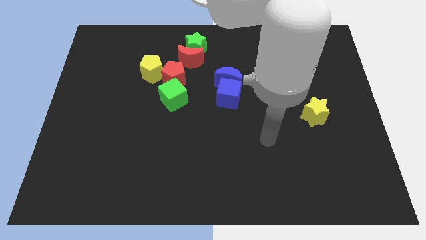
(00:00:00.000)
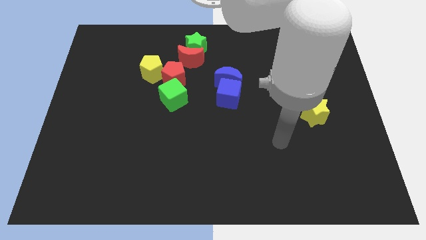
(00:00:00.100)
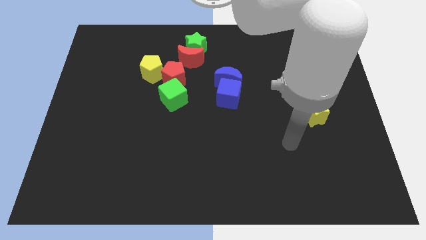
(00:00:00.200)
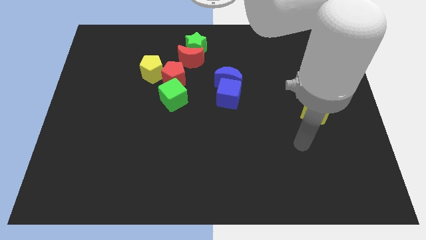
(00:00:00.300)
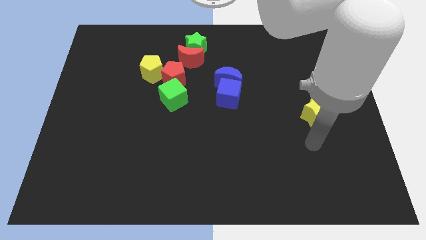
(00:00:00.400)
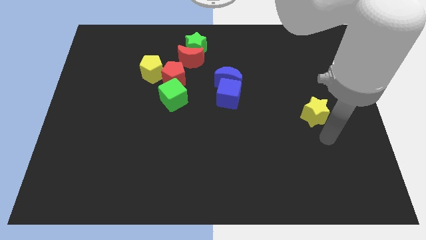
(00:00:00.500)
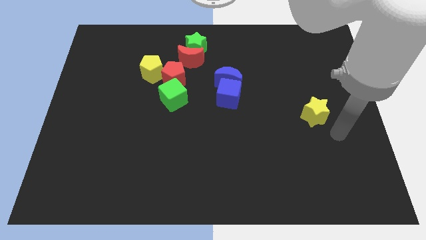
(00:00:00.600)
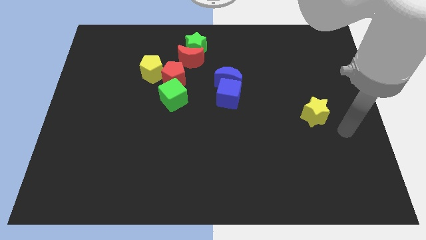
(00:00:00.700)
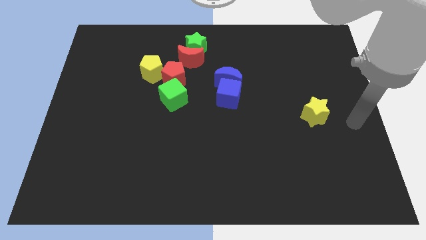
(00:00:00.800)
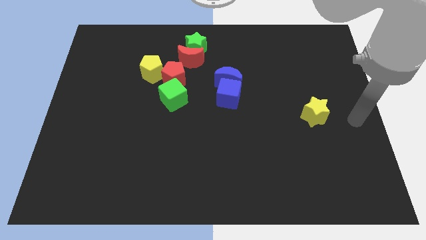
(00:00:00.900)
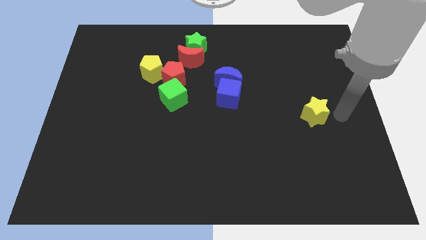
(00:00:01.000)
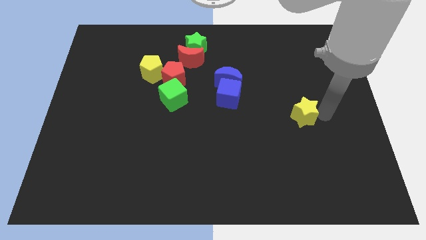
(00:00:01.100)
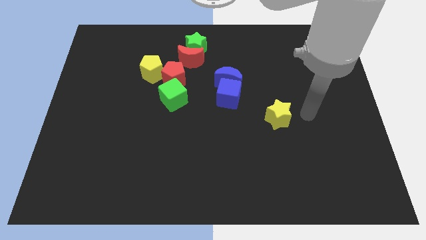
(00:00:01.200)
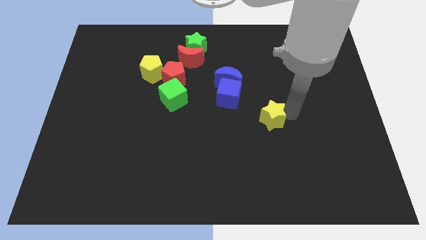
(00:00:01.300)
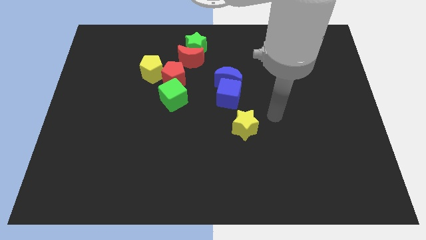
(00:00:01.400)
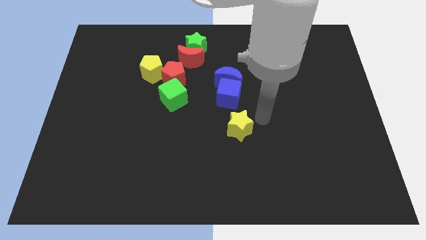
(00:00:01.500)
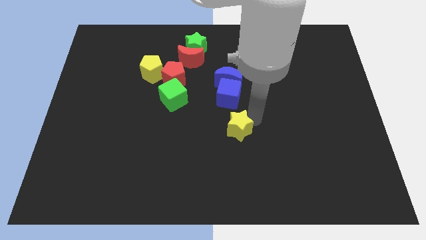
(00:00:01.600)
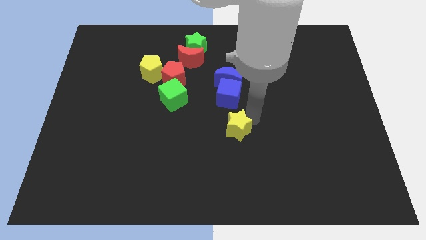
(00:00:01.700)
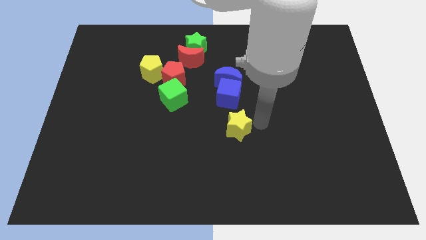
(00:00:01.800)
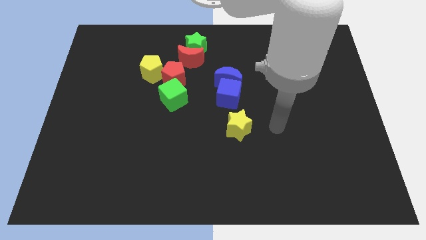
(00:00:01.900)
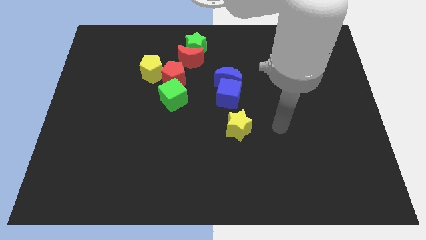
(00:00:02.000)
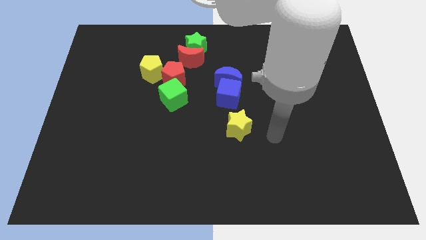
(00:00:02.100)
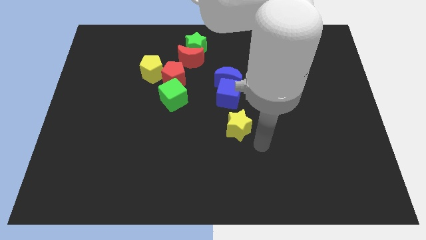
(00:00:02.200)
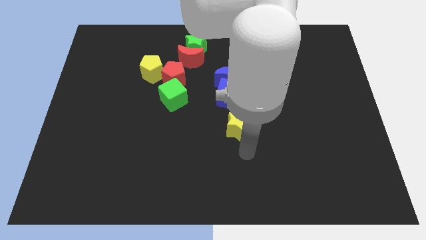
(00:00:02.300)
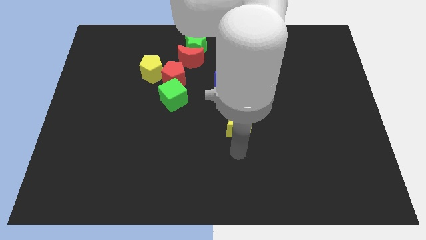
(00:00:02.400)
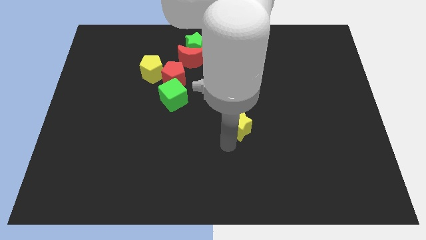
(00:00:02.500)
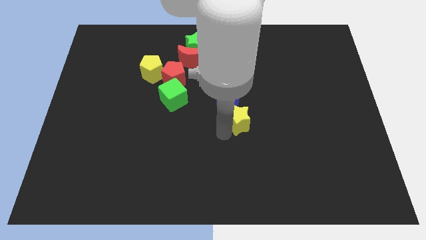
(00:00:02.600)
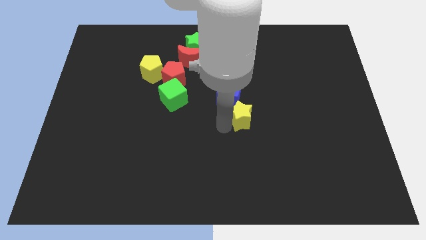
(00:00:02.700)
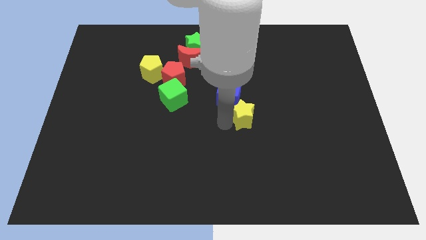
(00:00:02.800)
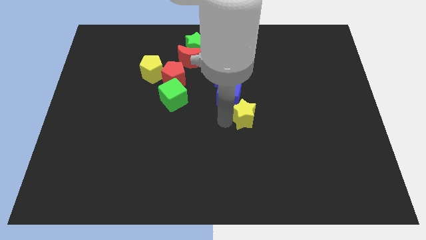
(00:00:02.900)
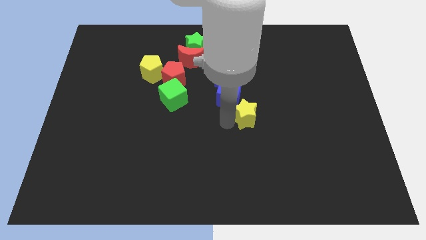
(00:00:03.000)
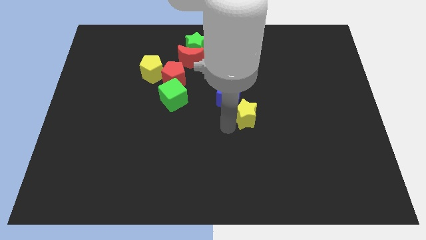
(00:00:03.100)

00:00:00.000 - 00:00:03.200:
place the yellow star to the bottom right side of the blue cube

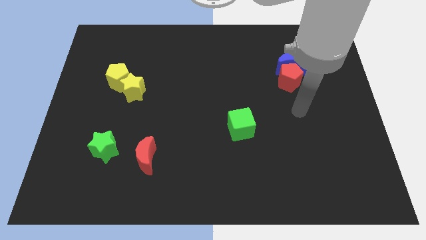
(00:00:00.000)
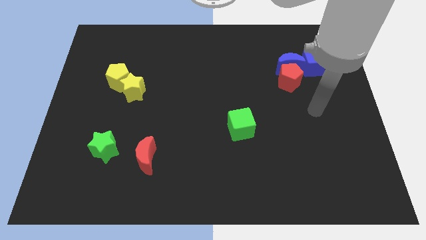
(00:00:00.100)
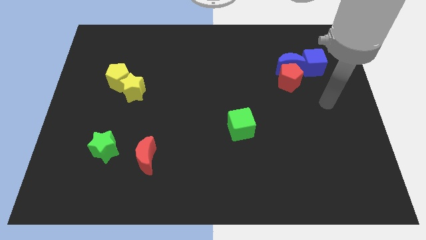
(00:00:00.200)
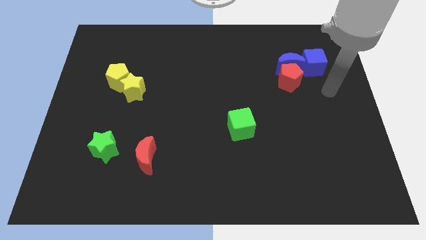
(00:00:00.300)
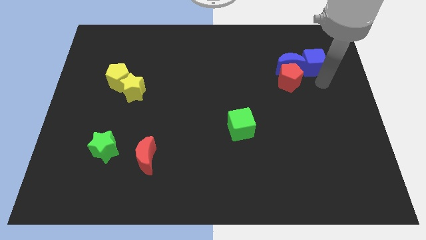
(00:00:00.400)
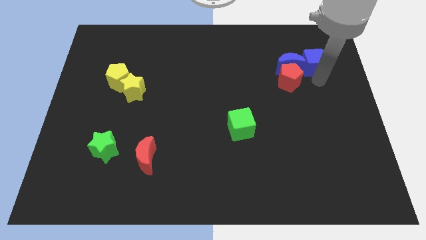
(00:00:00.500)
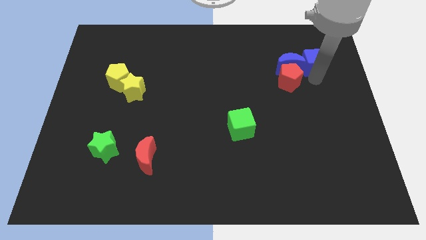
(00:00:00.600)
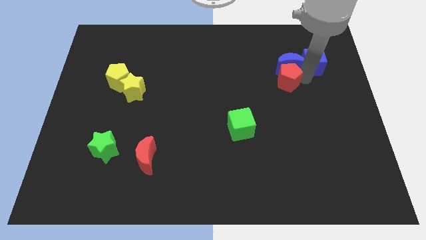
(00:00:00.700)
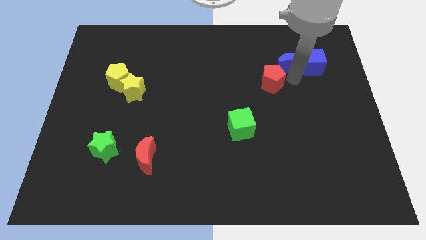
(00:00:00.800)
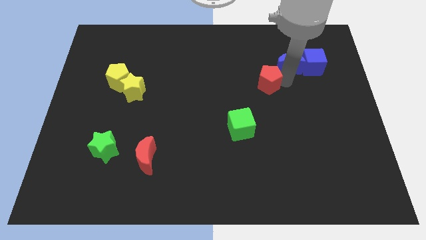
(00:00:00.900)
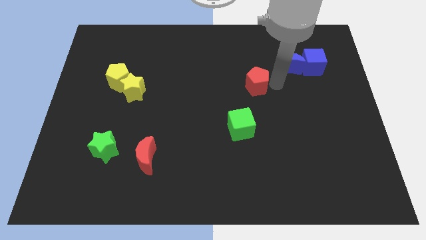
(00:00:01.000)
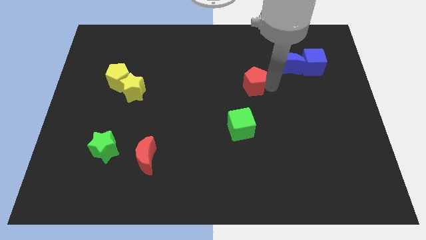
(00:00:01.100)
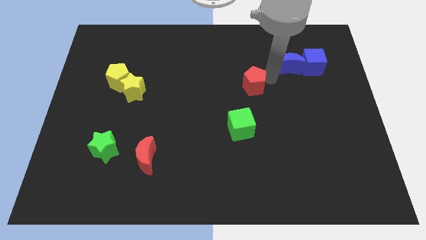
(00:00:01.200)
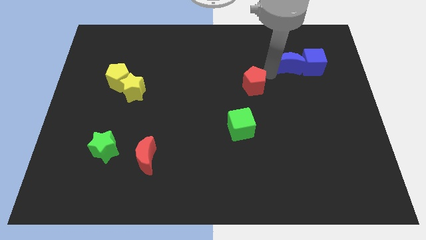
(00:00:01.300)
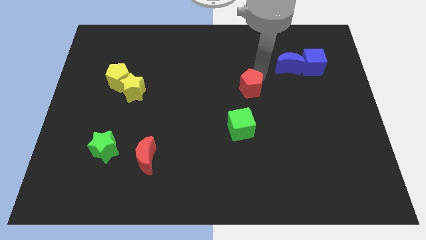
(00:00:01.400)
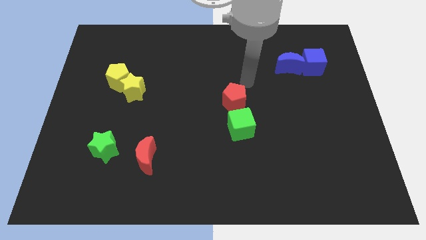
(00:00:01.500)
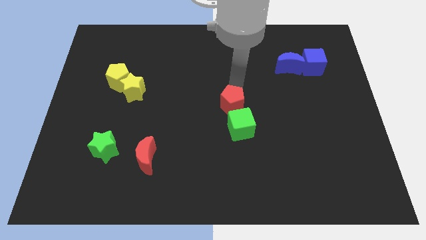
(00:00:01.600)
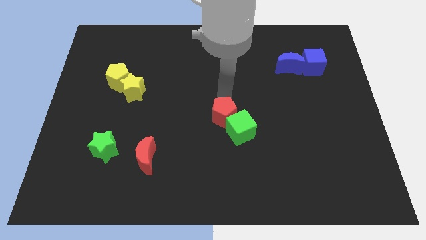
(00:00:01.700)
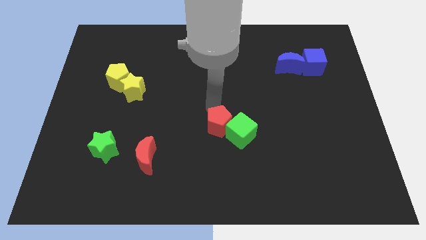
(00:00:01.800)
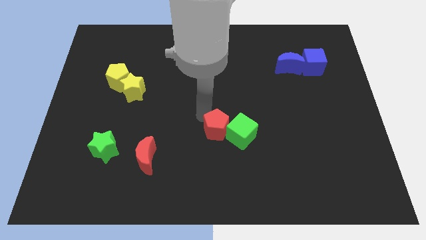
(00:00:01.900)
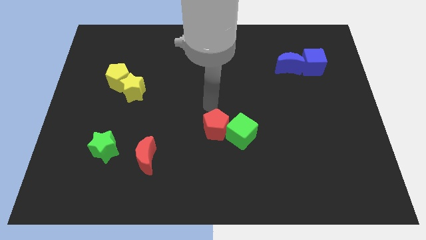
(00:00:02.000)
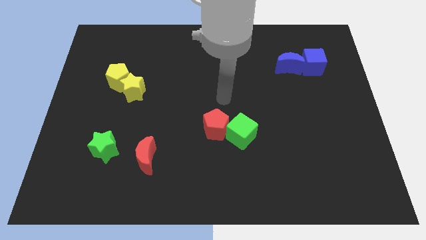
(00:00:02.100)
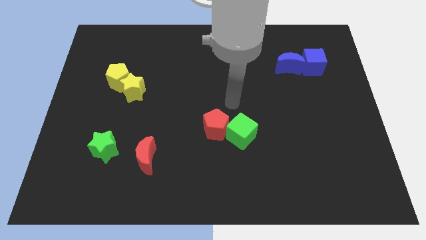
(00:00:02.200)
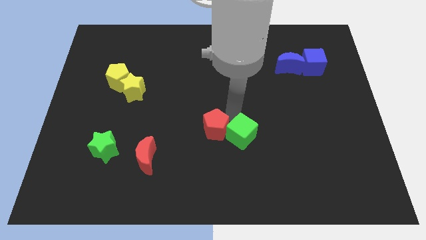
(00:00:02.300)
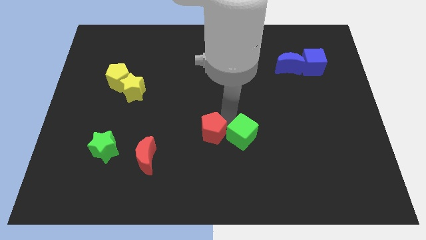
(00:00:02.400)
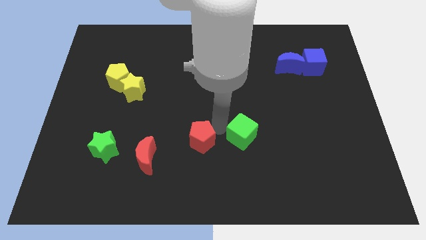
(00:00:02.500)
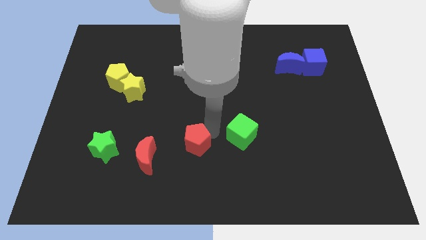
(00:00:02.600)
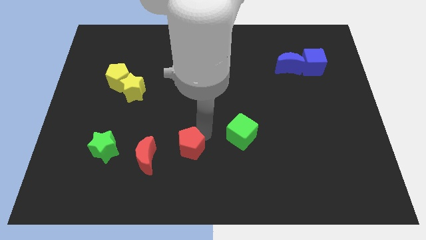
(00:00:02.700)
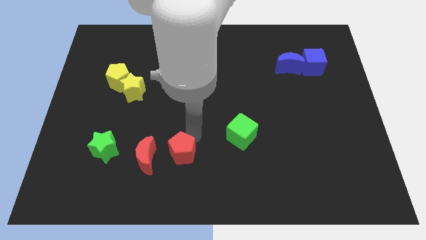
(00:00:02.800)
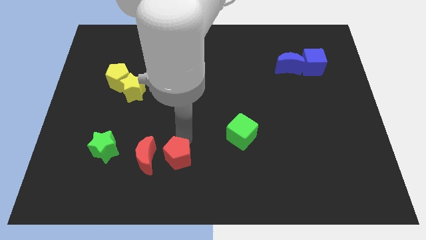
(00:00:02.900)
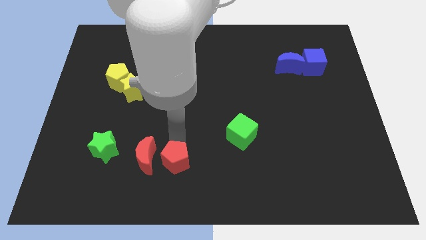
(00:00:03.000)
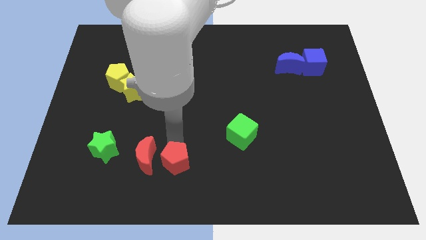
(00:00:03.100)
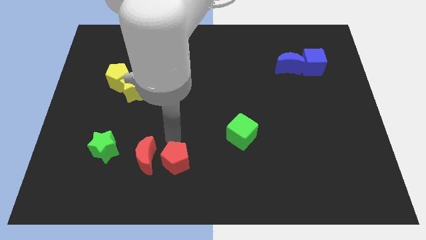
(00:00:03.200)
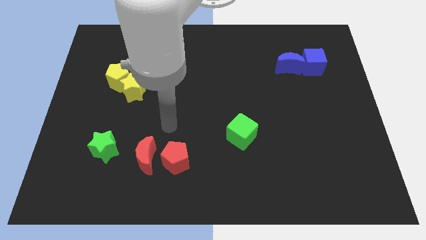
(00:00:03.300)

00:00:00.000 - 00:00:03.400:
place the red pentagon right to the red moon

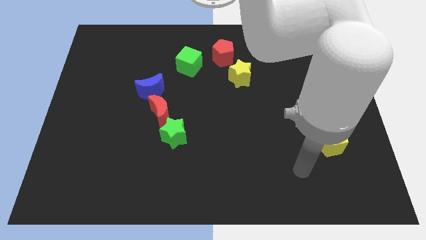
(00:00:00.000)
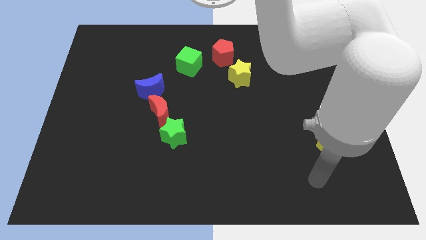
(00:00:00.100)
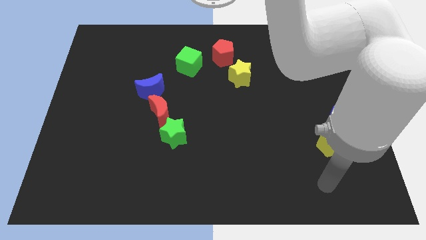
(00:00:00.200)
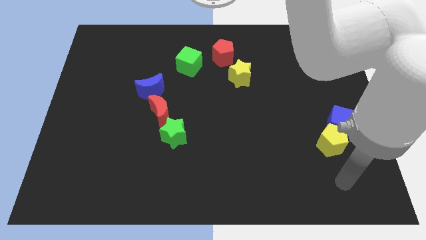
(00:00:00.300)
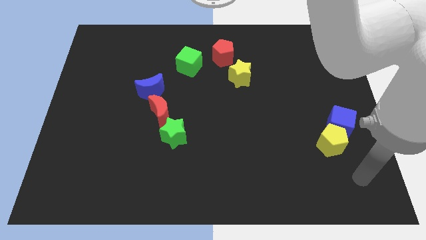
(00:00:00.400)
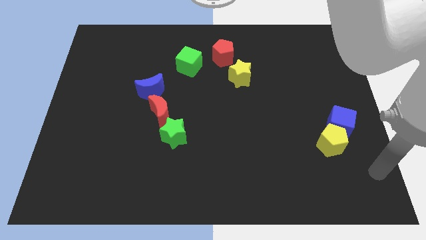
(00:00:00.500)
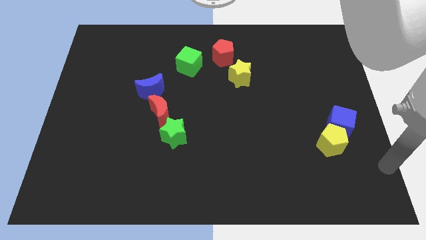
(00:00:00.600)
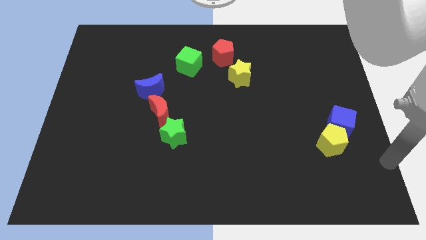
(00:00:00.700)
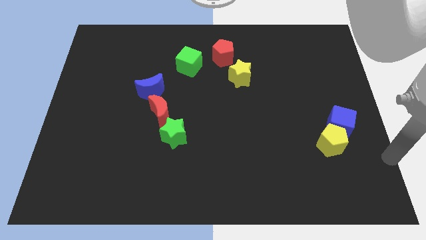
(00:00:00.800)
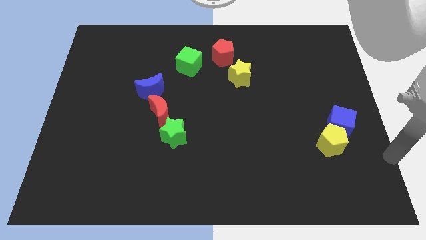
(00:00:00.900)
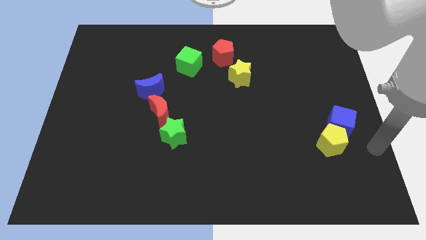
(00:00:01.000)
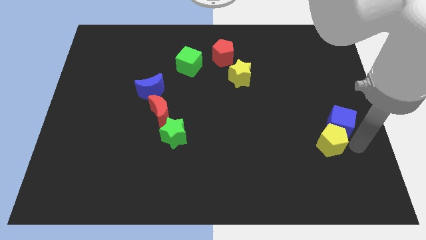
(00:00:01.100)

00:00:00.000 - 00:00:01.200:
point your arm at the right of the yellow pentagon

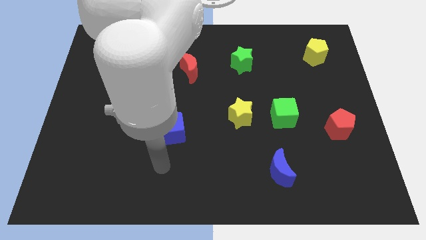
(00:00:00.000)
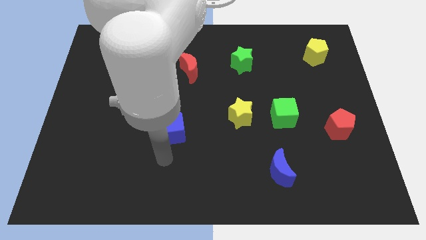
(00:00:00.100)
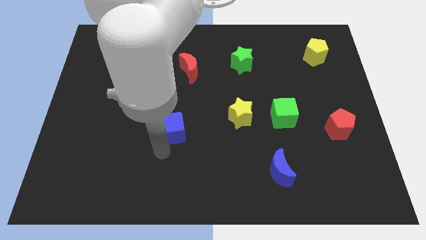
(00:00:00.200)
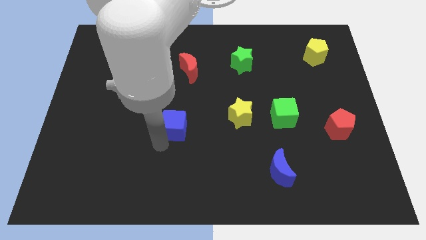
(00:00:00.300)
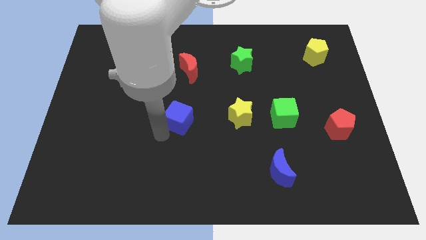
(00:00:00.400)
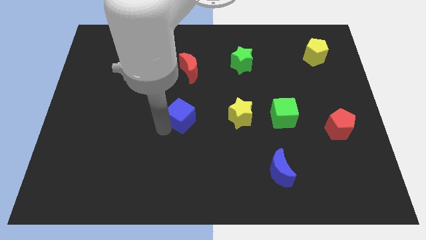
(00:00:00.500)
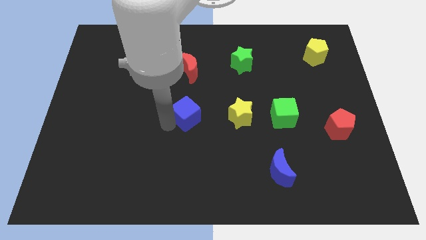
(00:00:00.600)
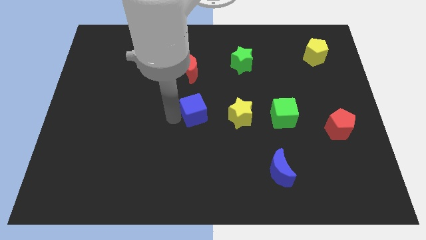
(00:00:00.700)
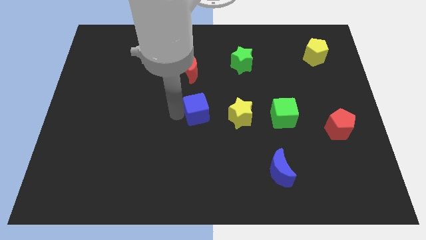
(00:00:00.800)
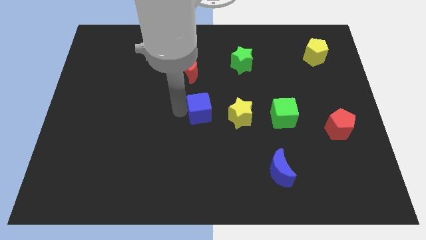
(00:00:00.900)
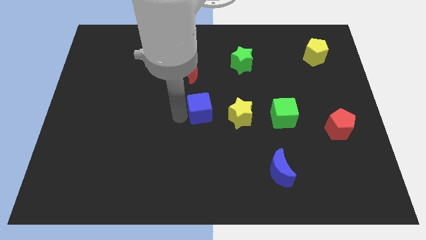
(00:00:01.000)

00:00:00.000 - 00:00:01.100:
push the blue cube to the left of the yellow star

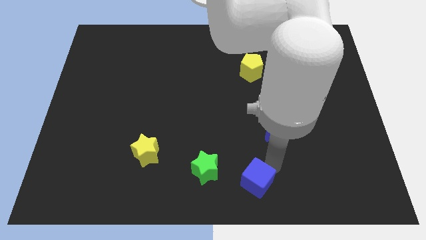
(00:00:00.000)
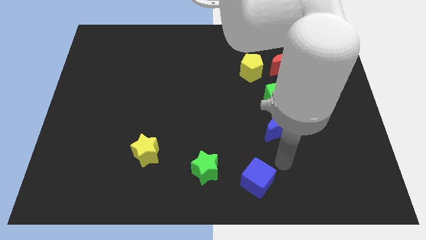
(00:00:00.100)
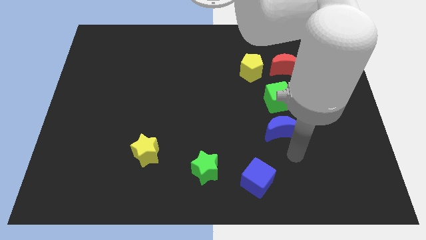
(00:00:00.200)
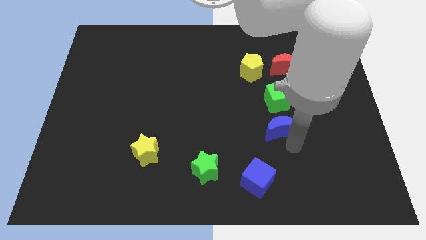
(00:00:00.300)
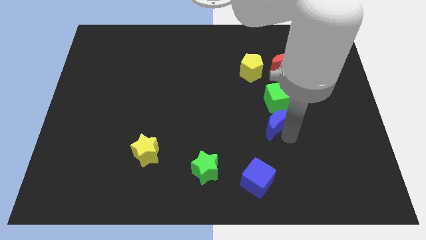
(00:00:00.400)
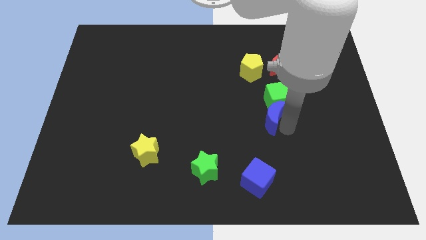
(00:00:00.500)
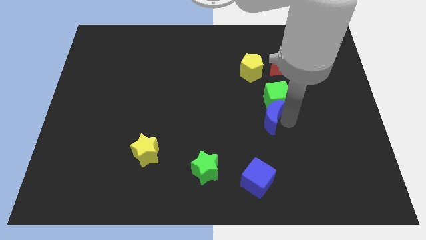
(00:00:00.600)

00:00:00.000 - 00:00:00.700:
push blue crescent into green cube
